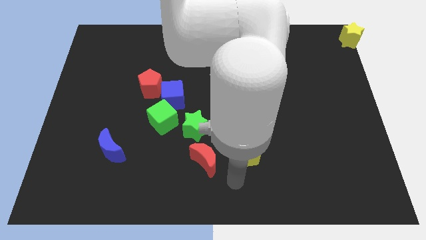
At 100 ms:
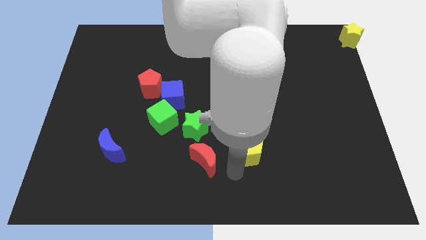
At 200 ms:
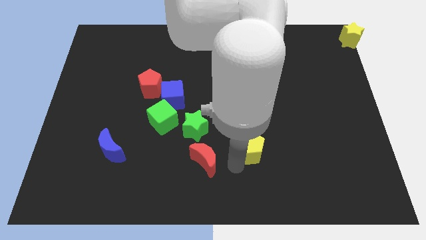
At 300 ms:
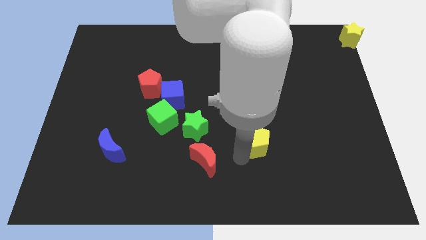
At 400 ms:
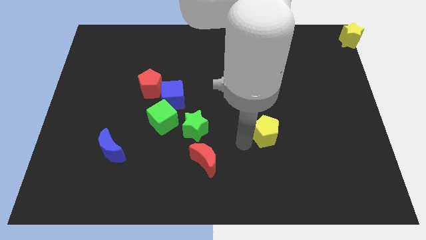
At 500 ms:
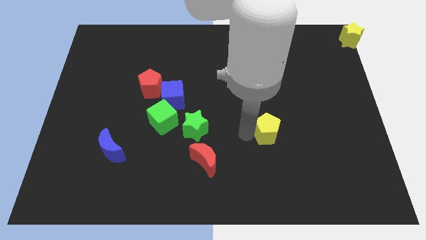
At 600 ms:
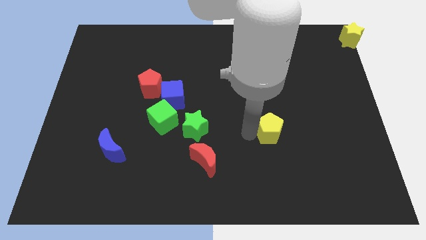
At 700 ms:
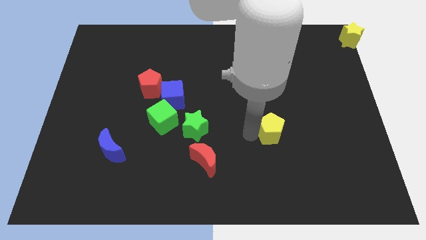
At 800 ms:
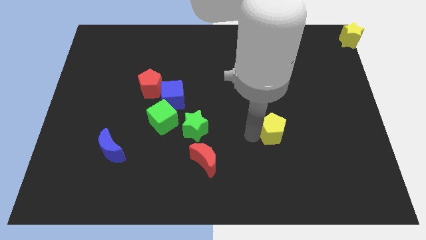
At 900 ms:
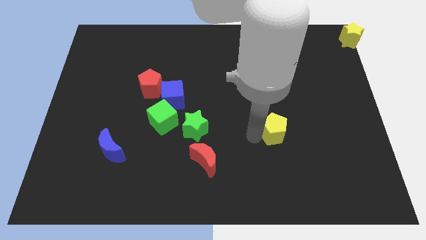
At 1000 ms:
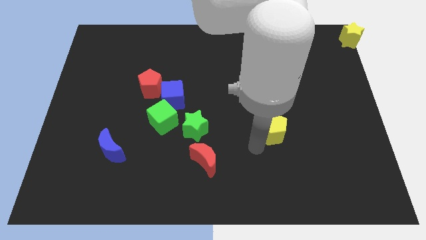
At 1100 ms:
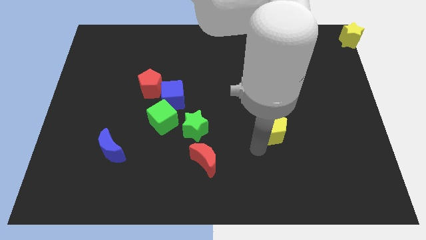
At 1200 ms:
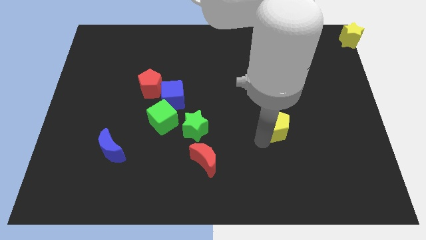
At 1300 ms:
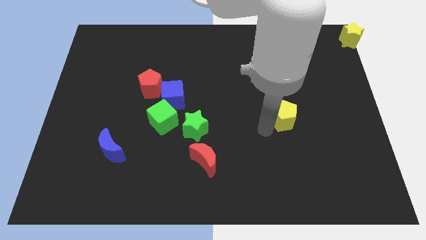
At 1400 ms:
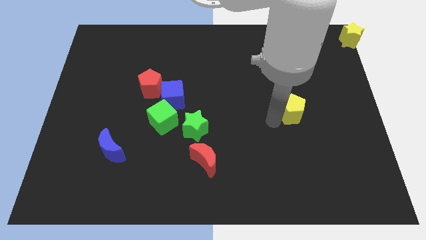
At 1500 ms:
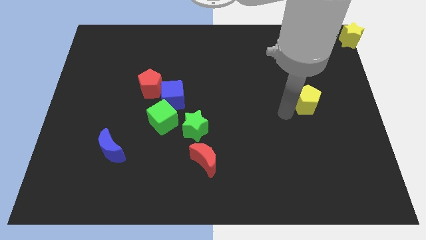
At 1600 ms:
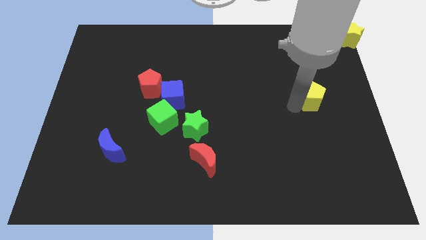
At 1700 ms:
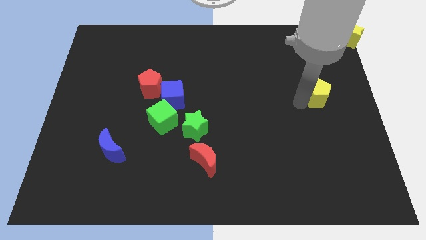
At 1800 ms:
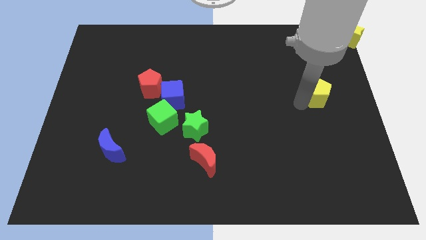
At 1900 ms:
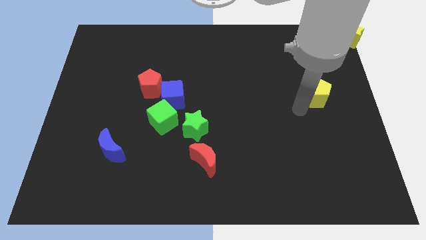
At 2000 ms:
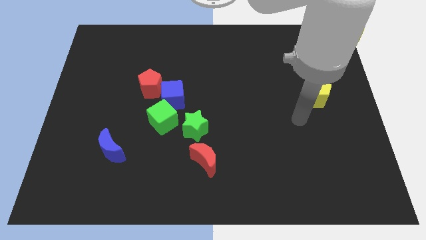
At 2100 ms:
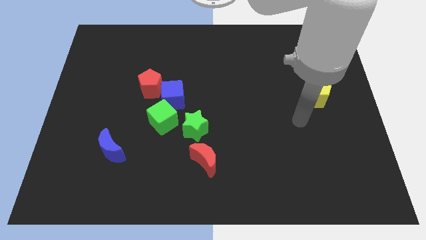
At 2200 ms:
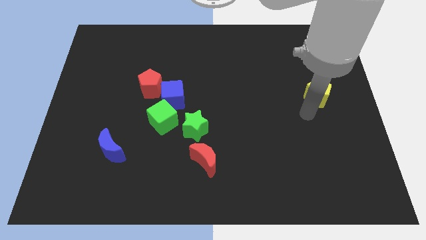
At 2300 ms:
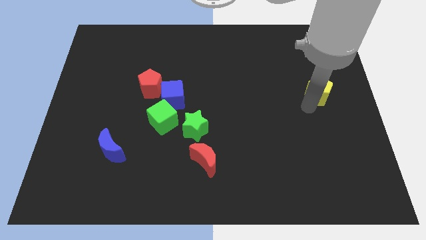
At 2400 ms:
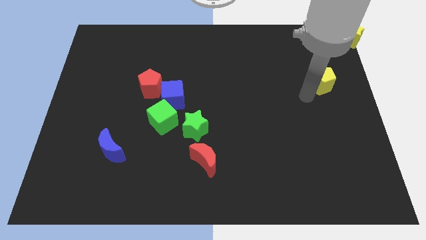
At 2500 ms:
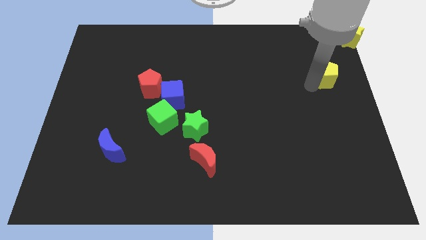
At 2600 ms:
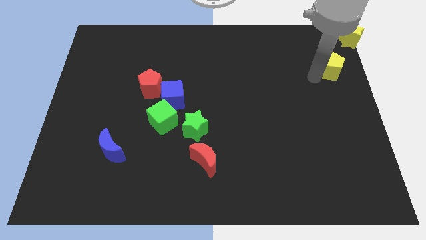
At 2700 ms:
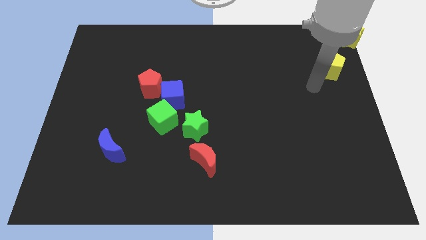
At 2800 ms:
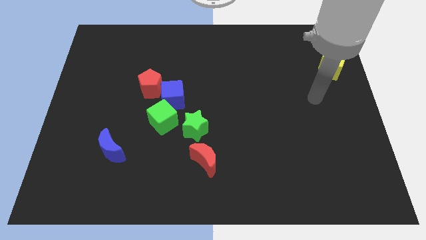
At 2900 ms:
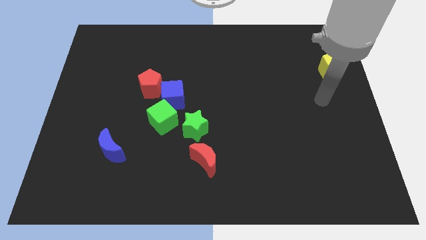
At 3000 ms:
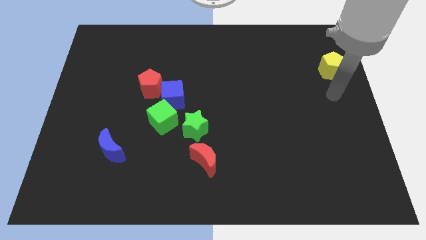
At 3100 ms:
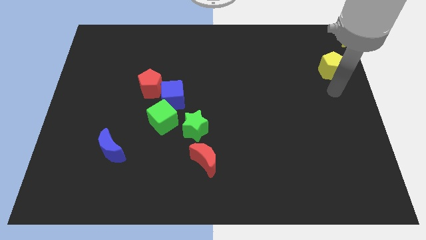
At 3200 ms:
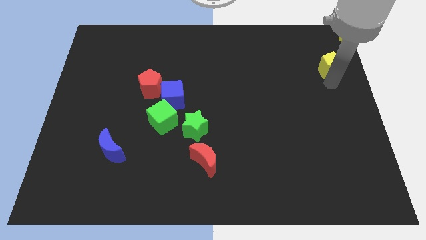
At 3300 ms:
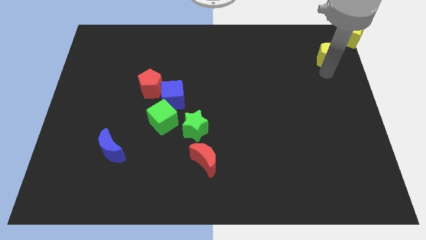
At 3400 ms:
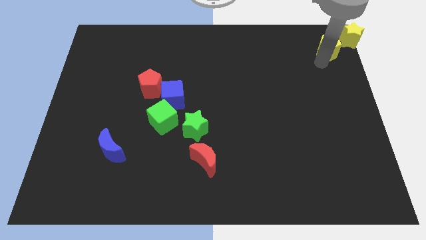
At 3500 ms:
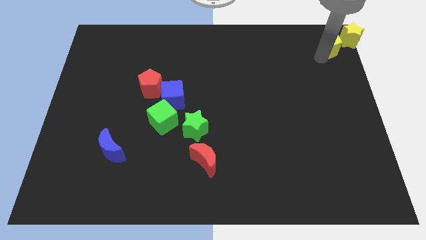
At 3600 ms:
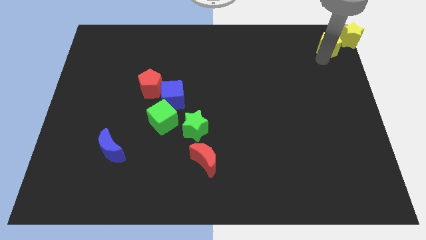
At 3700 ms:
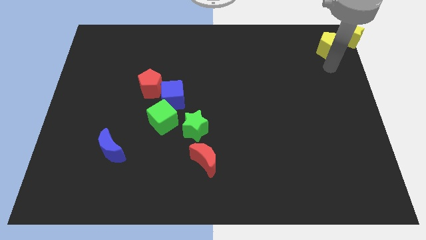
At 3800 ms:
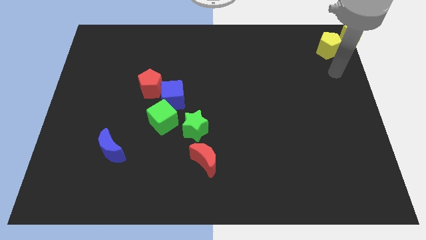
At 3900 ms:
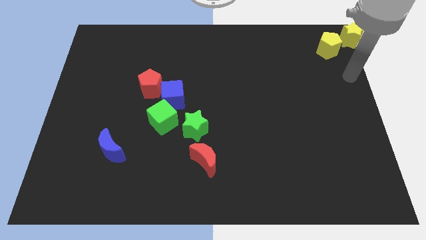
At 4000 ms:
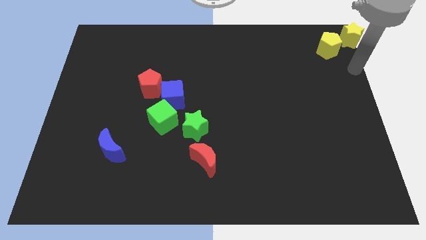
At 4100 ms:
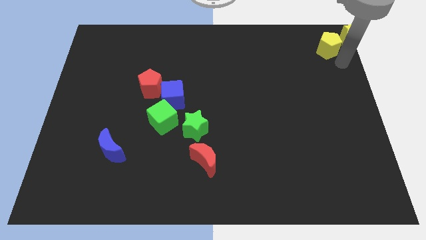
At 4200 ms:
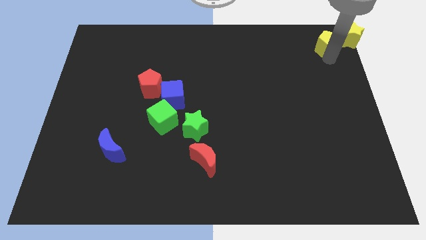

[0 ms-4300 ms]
place the yellow pentagon towards the bottom left side of the yellow star

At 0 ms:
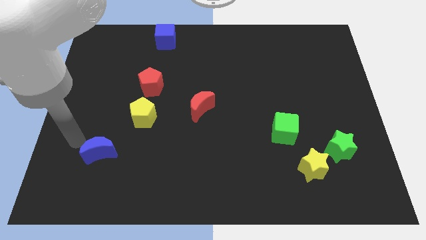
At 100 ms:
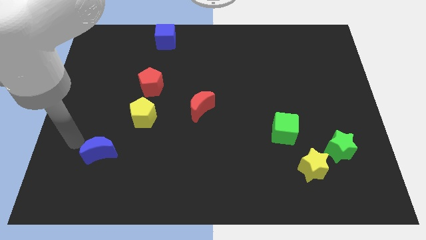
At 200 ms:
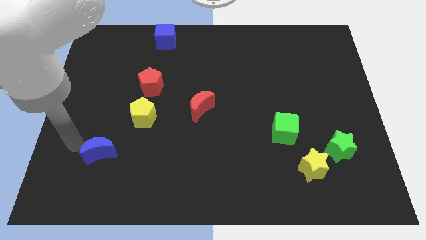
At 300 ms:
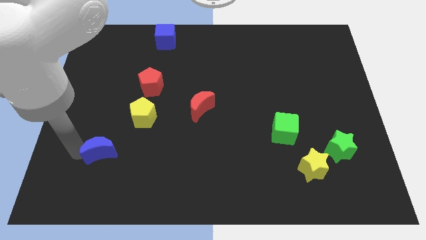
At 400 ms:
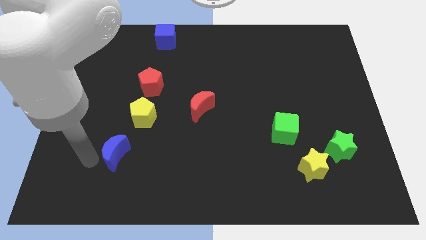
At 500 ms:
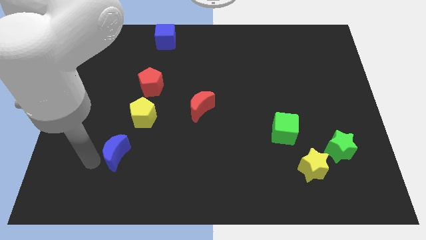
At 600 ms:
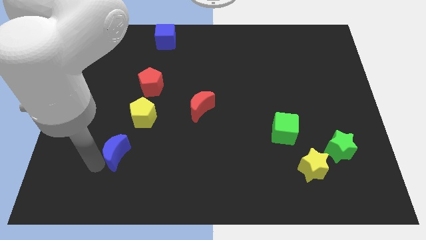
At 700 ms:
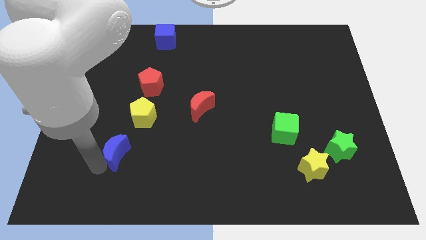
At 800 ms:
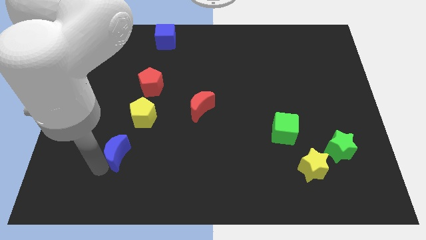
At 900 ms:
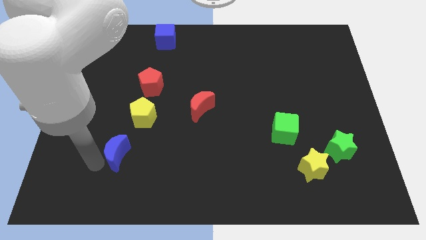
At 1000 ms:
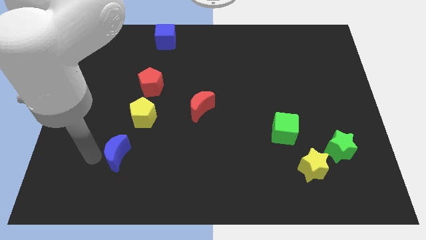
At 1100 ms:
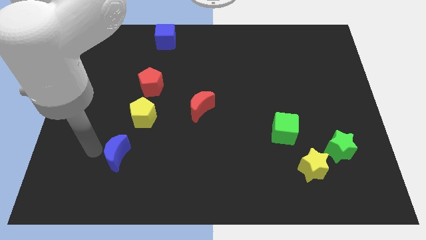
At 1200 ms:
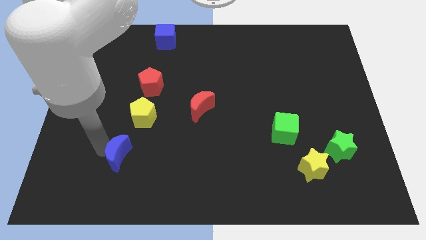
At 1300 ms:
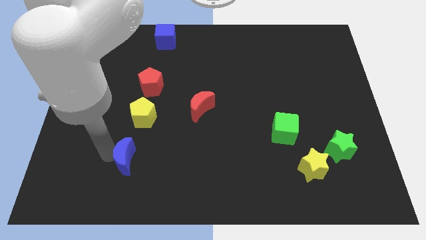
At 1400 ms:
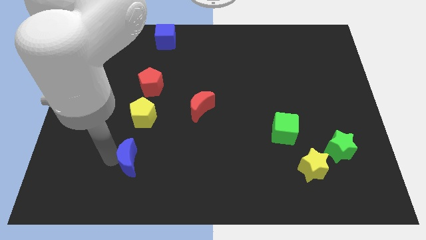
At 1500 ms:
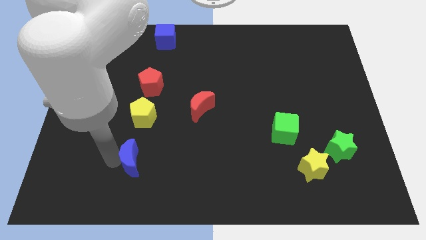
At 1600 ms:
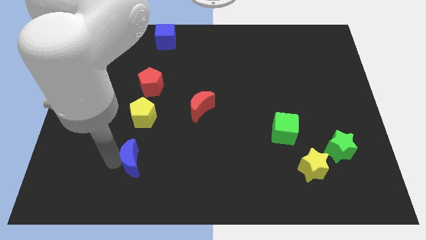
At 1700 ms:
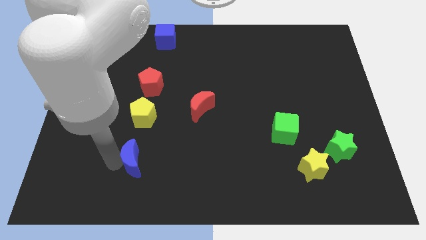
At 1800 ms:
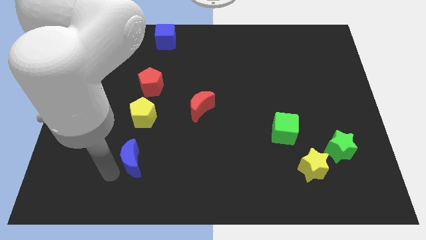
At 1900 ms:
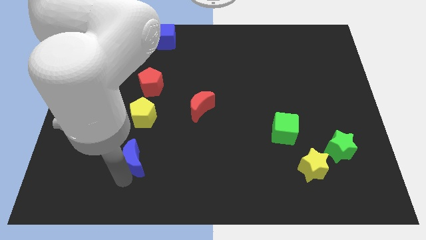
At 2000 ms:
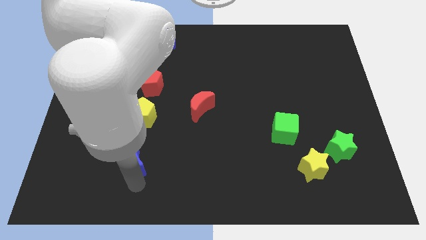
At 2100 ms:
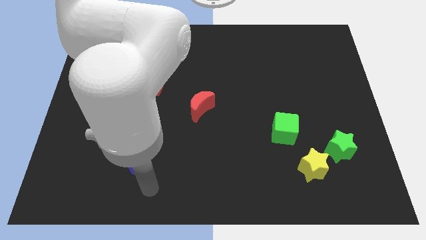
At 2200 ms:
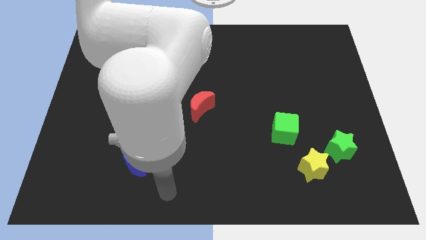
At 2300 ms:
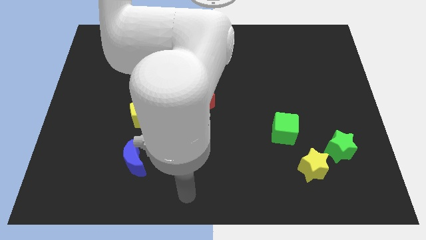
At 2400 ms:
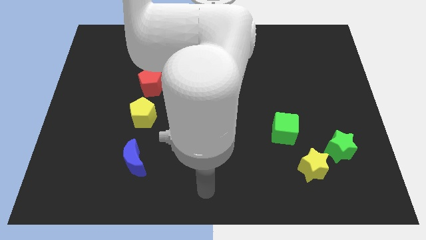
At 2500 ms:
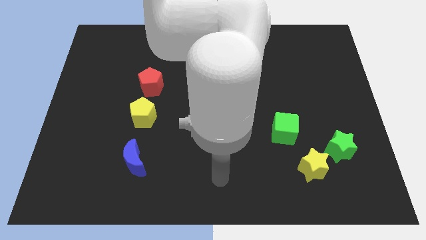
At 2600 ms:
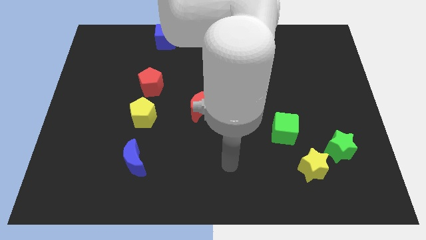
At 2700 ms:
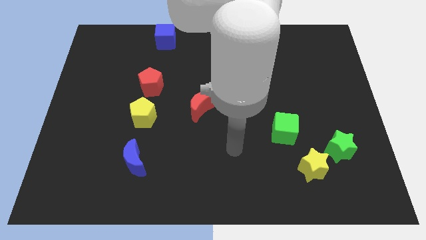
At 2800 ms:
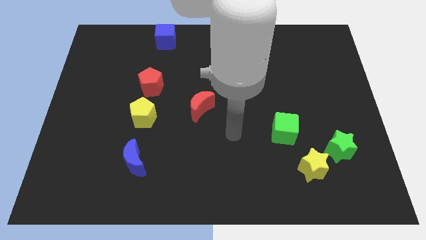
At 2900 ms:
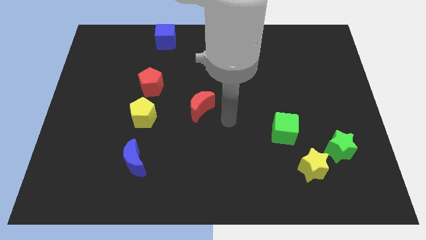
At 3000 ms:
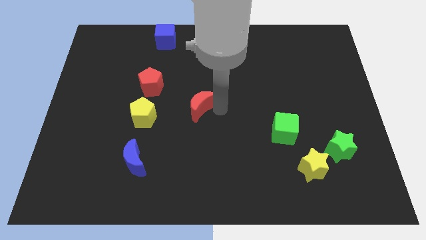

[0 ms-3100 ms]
move your arm upward

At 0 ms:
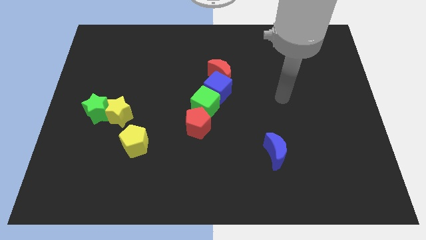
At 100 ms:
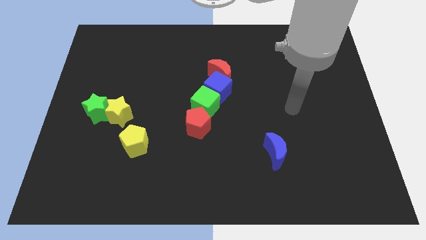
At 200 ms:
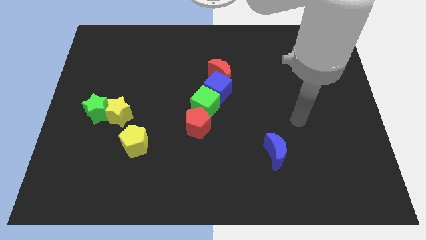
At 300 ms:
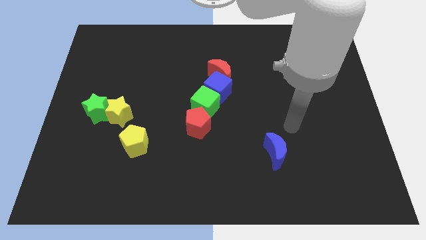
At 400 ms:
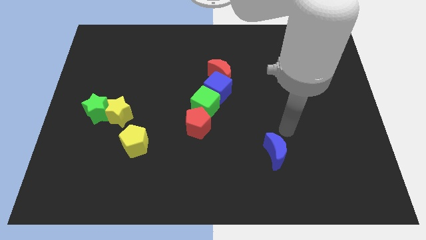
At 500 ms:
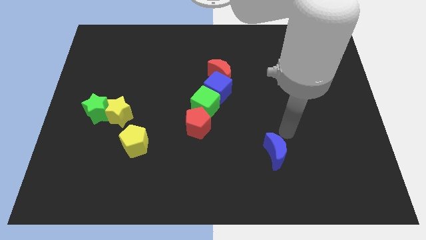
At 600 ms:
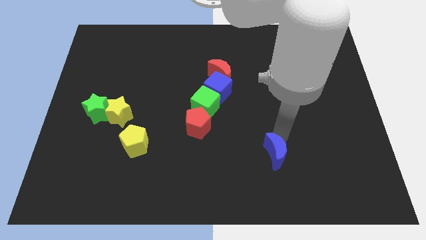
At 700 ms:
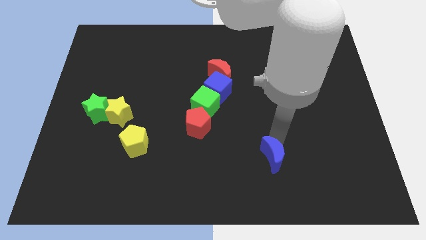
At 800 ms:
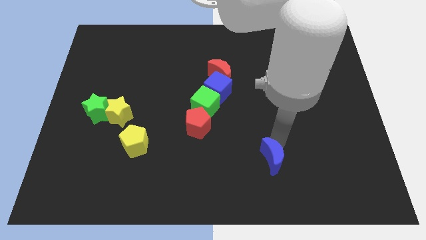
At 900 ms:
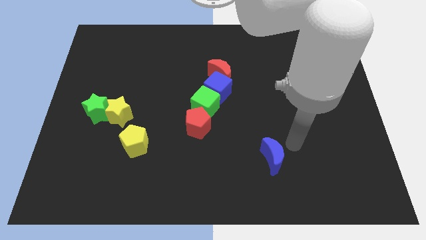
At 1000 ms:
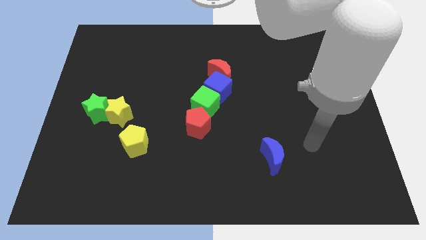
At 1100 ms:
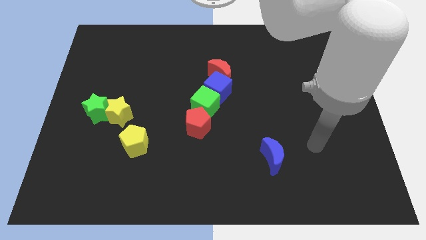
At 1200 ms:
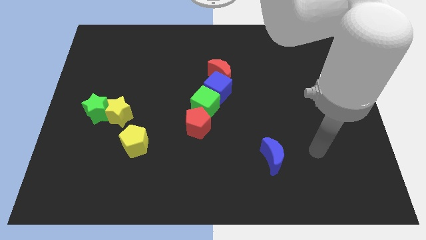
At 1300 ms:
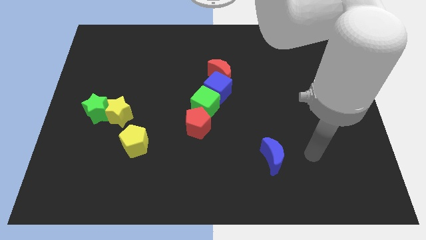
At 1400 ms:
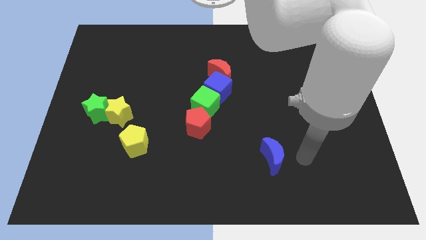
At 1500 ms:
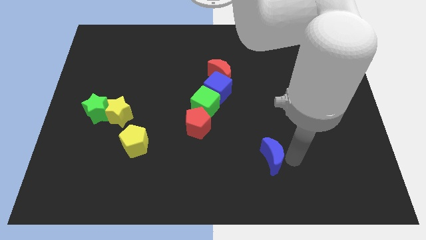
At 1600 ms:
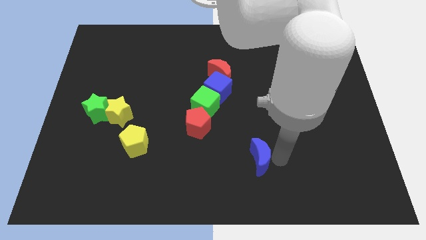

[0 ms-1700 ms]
move the arm towards the blue crescent

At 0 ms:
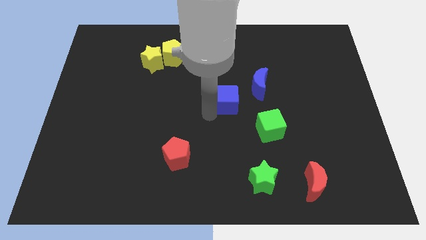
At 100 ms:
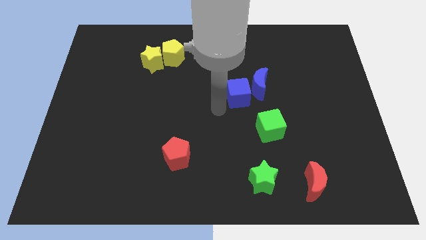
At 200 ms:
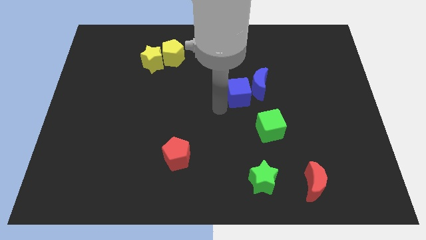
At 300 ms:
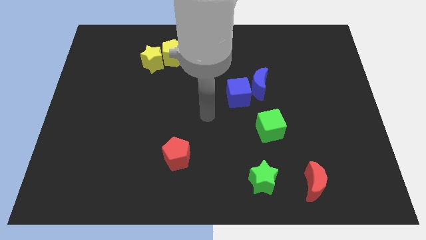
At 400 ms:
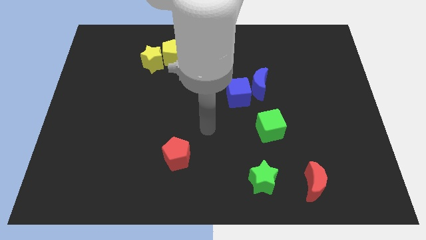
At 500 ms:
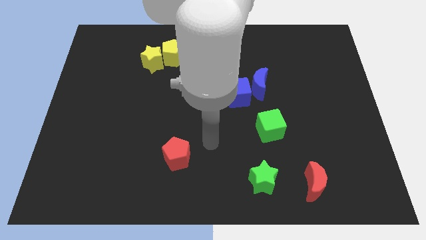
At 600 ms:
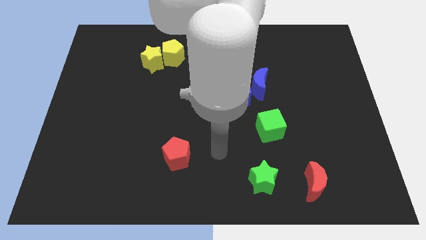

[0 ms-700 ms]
move the blue cube close to the blue crescent
